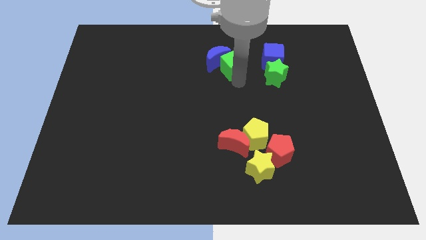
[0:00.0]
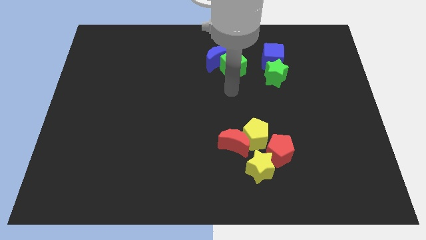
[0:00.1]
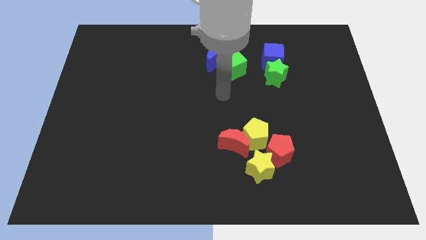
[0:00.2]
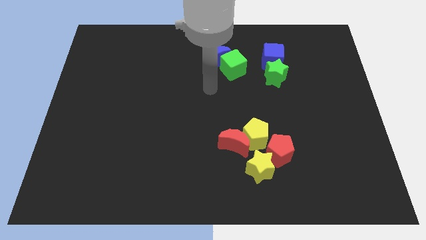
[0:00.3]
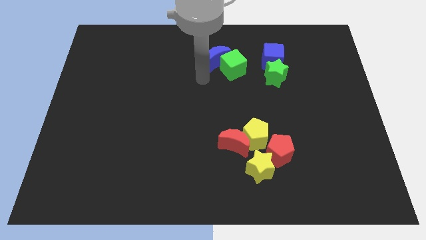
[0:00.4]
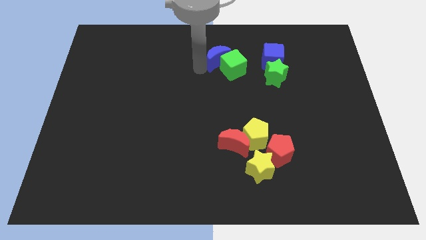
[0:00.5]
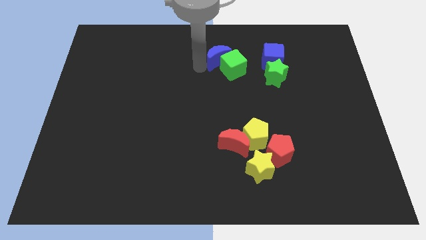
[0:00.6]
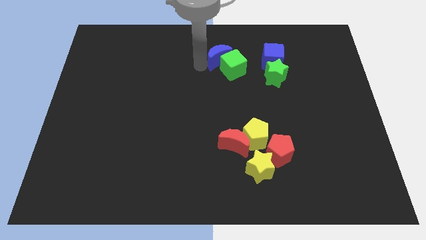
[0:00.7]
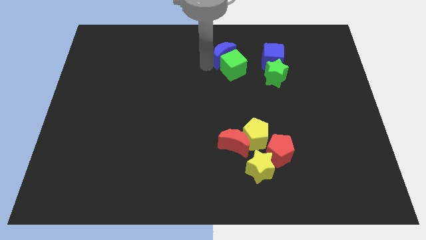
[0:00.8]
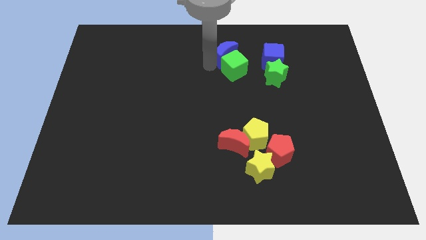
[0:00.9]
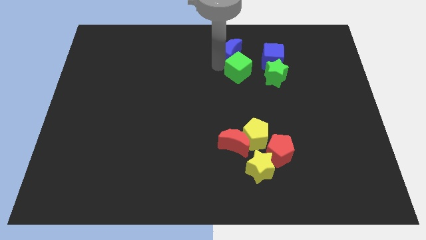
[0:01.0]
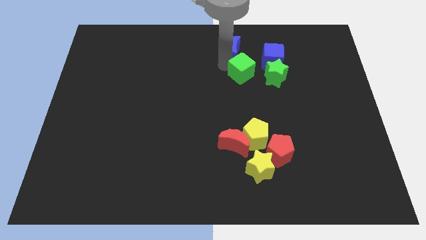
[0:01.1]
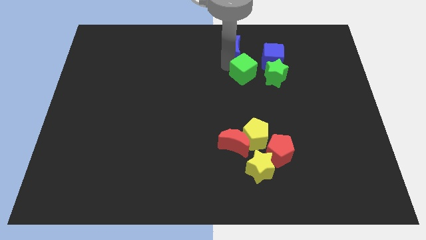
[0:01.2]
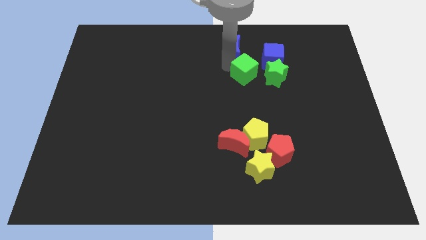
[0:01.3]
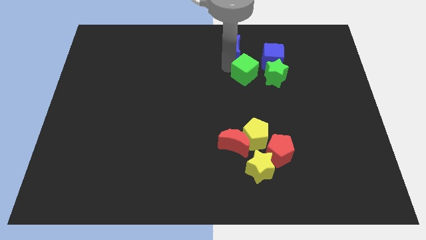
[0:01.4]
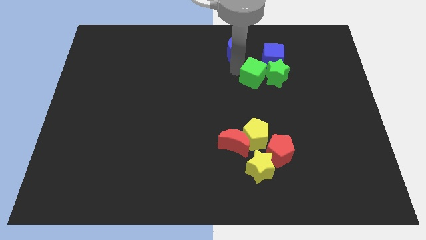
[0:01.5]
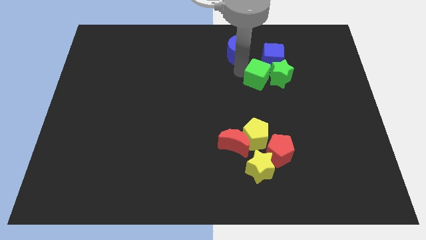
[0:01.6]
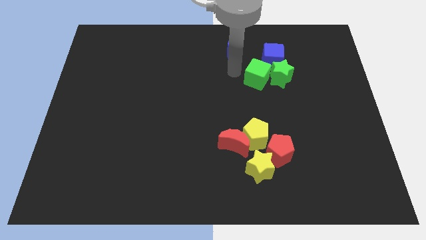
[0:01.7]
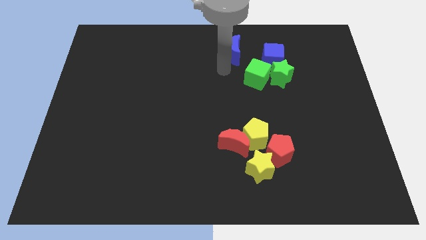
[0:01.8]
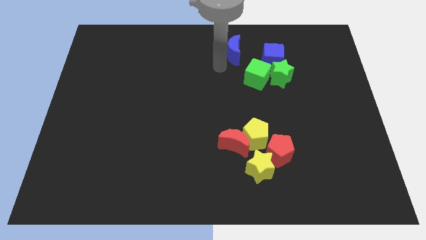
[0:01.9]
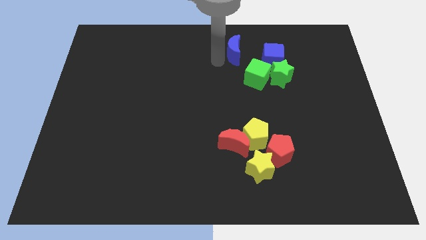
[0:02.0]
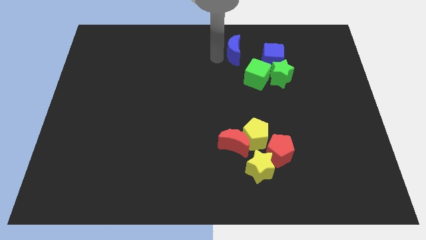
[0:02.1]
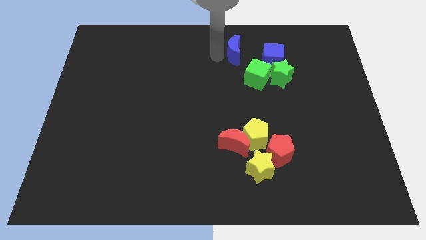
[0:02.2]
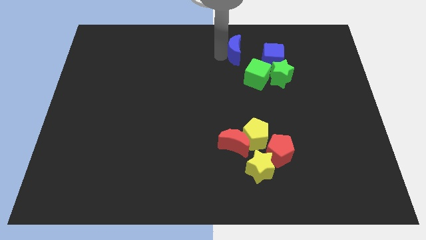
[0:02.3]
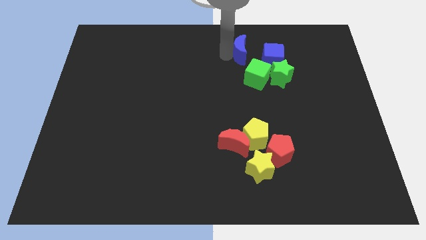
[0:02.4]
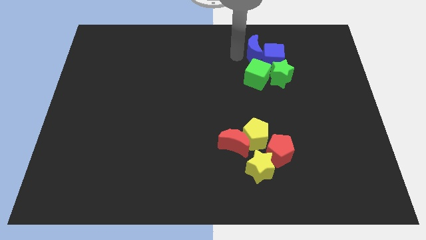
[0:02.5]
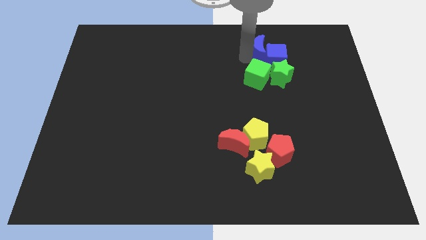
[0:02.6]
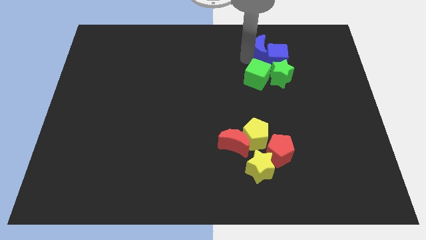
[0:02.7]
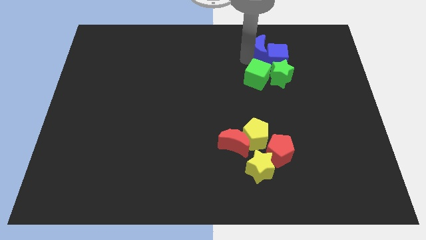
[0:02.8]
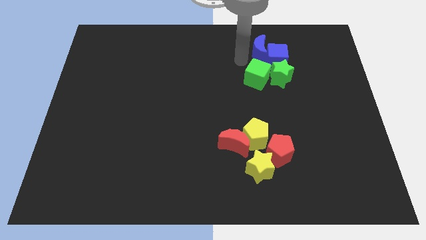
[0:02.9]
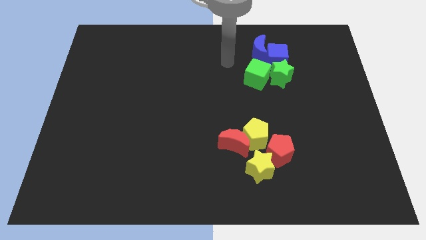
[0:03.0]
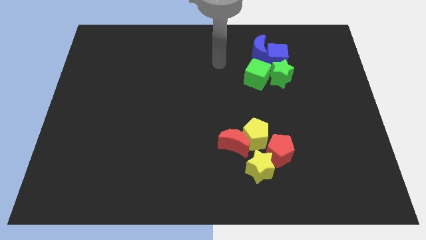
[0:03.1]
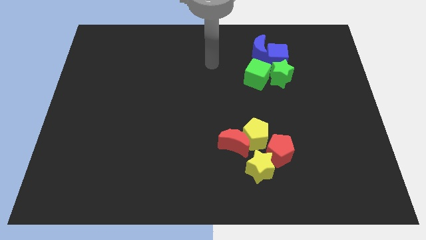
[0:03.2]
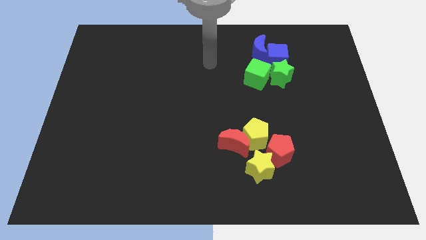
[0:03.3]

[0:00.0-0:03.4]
move all the blue and green blocks to form a group of blocks

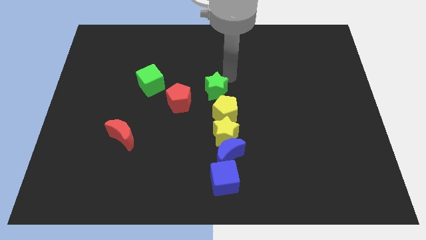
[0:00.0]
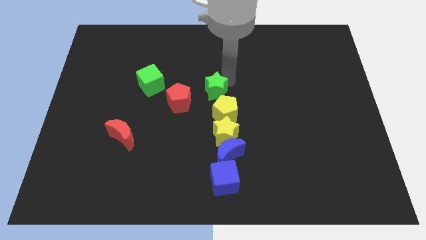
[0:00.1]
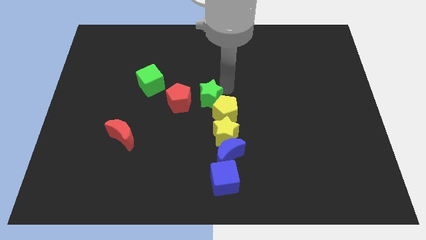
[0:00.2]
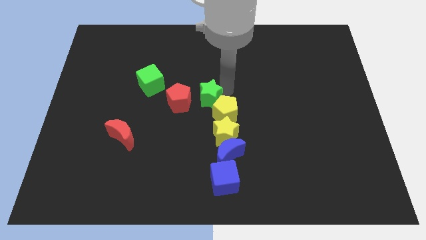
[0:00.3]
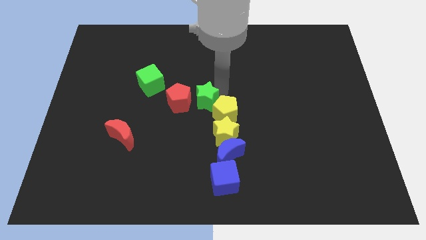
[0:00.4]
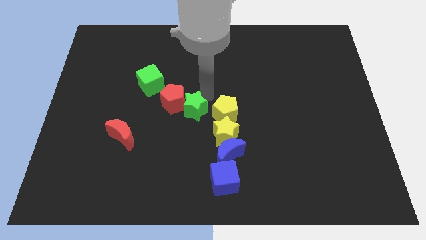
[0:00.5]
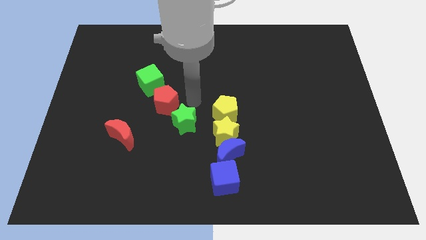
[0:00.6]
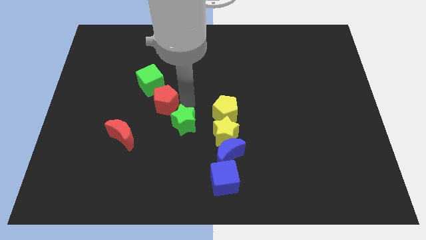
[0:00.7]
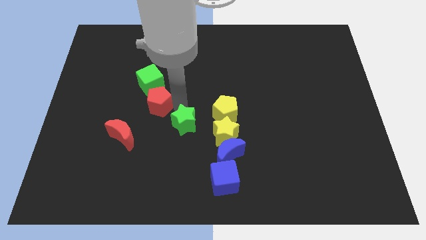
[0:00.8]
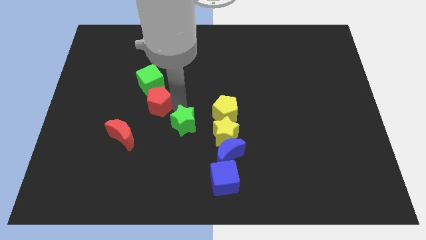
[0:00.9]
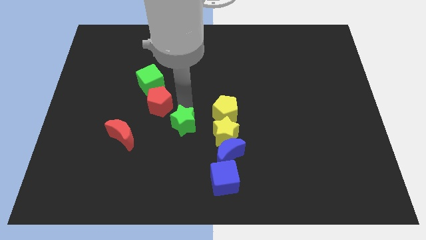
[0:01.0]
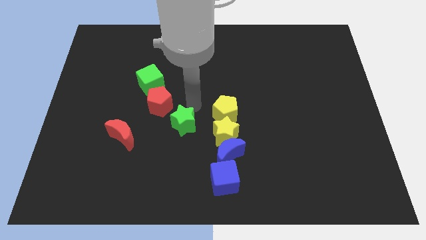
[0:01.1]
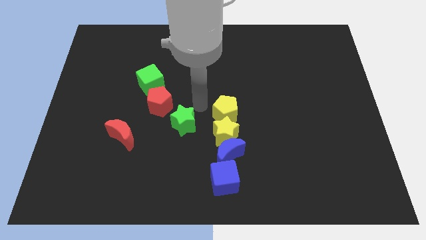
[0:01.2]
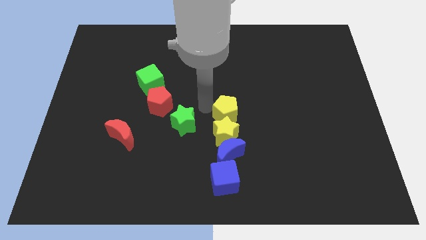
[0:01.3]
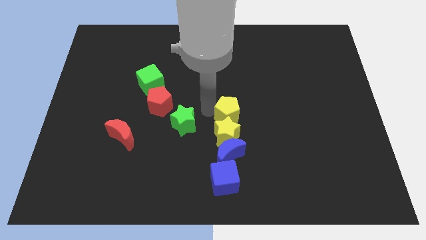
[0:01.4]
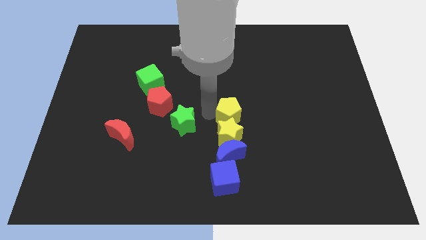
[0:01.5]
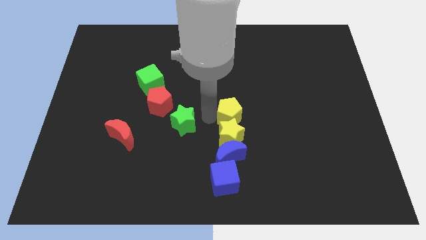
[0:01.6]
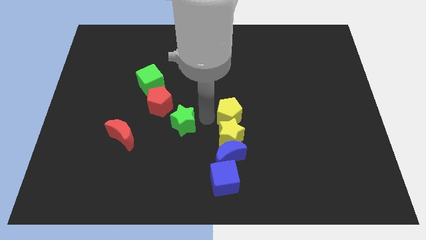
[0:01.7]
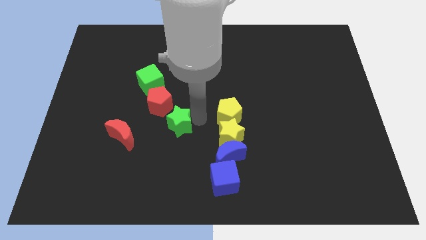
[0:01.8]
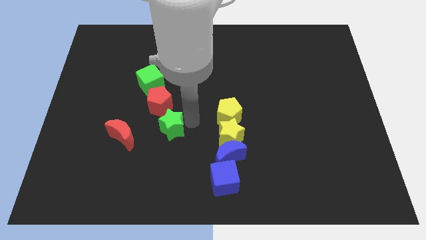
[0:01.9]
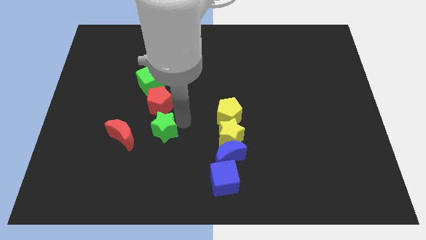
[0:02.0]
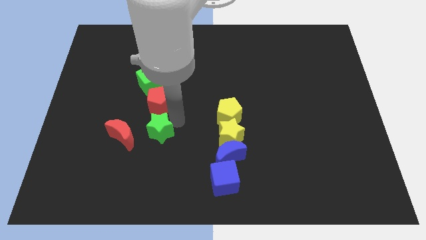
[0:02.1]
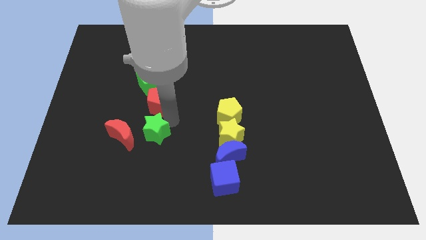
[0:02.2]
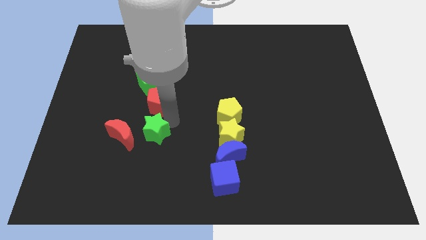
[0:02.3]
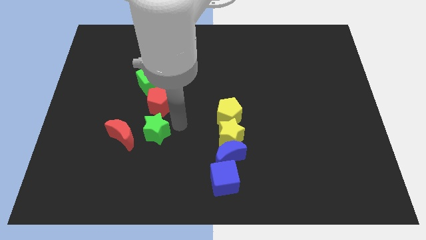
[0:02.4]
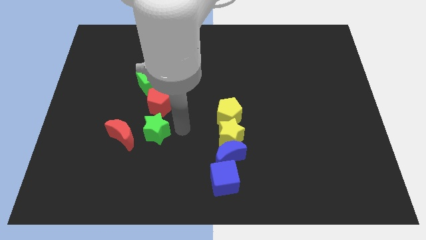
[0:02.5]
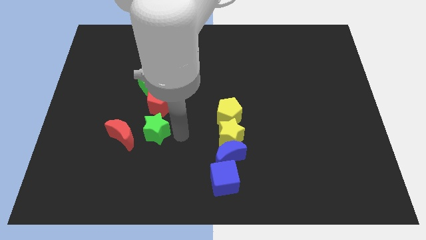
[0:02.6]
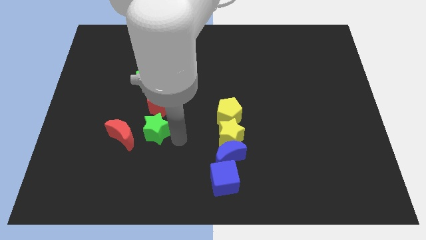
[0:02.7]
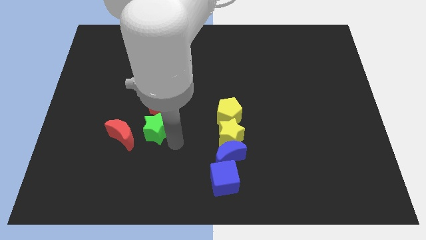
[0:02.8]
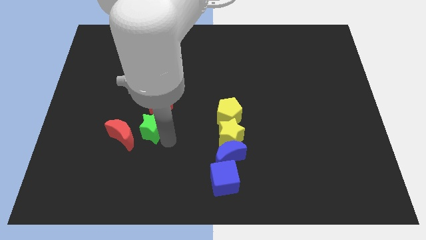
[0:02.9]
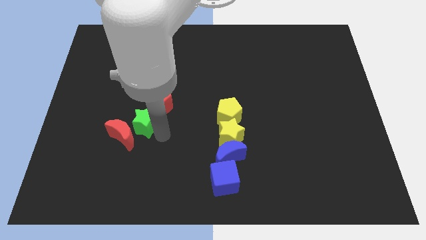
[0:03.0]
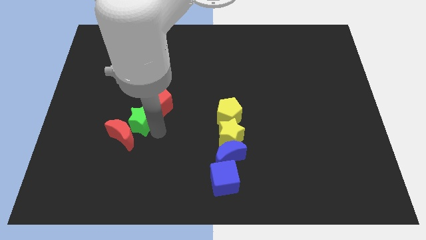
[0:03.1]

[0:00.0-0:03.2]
place the green star to the top of the red pentagon

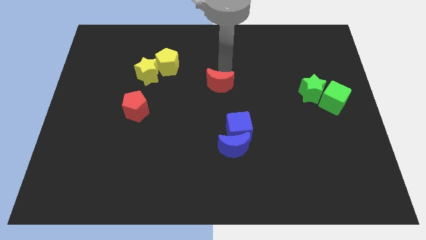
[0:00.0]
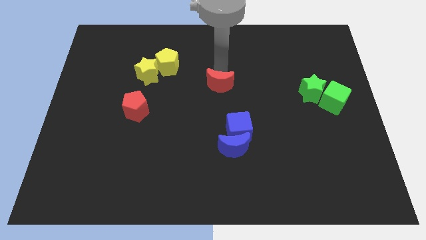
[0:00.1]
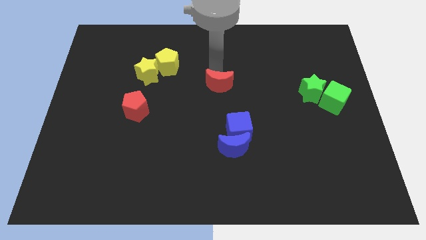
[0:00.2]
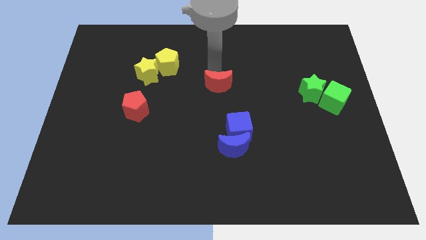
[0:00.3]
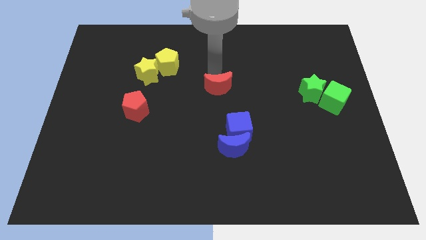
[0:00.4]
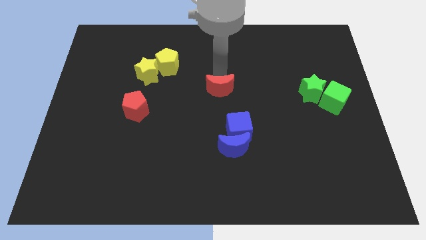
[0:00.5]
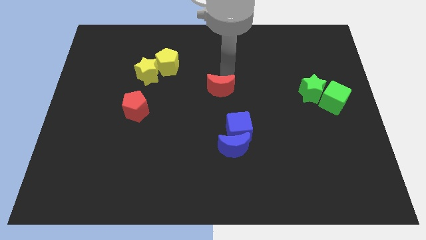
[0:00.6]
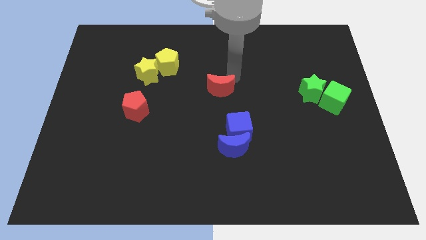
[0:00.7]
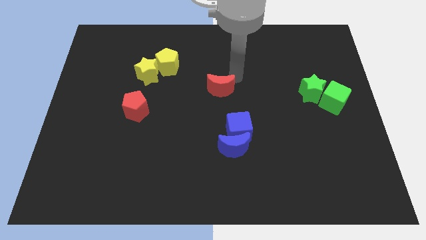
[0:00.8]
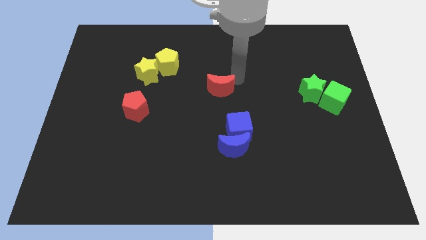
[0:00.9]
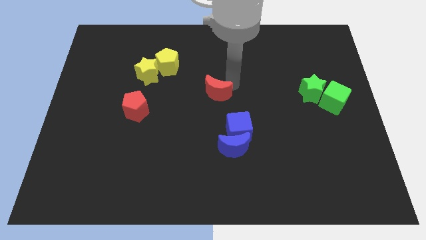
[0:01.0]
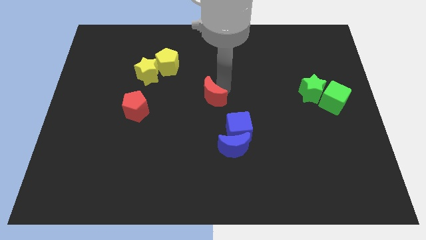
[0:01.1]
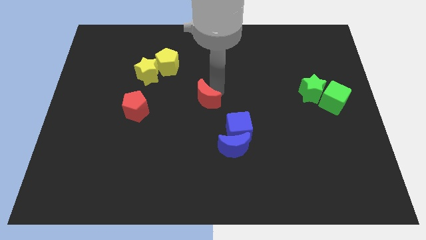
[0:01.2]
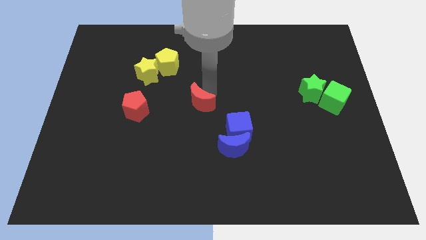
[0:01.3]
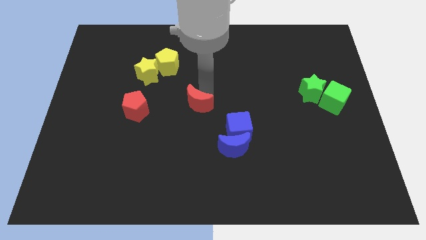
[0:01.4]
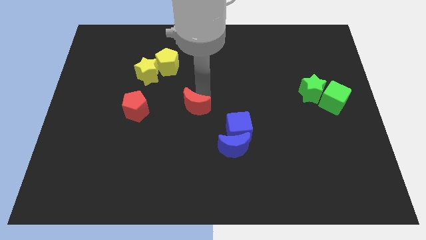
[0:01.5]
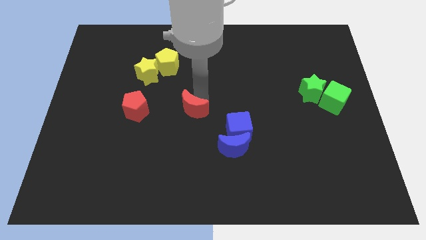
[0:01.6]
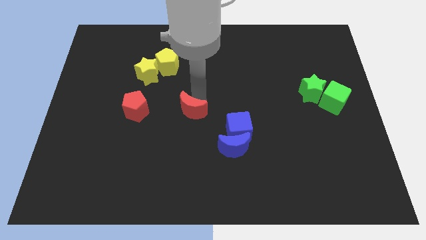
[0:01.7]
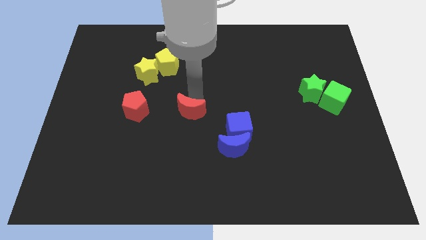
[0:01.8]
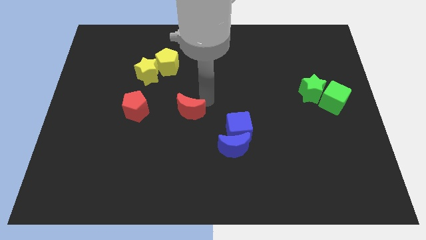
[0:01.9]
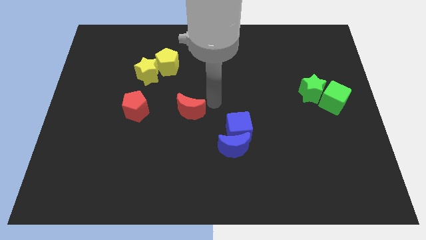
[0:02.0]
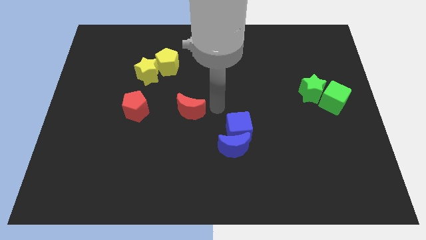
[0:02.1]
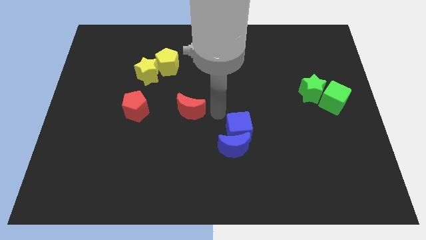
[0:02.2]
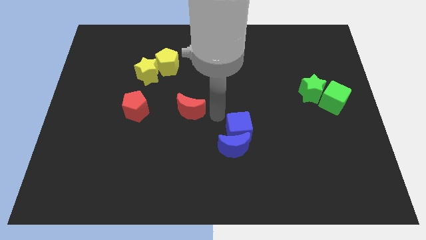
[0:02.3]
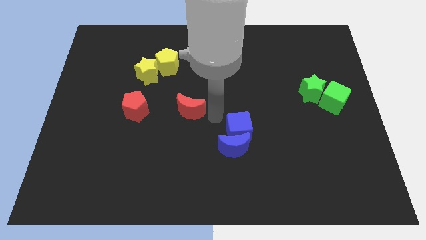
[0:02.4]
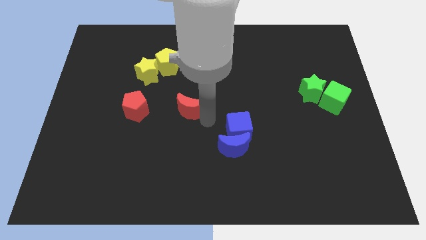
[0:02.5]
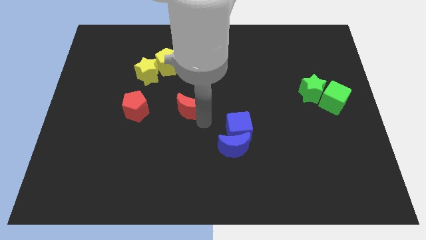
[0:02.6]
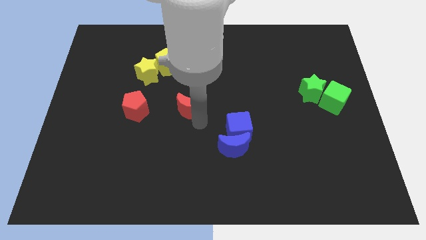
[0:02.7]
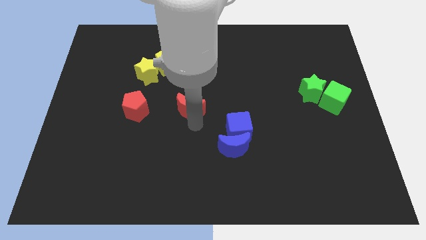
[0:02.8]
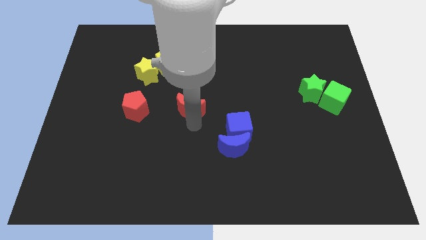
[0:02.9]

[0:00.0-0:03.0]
put the red moon parallel to red pentagon
